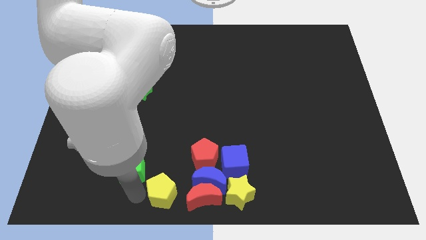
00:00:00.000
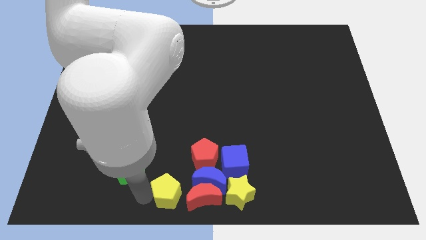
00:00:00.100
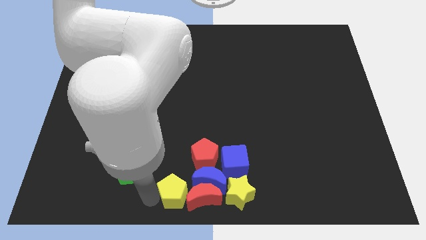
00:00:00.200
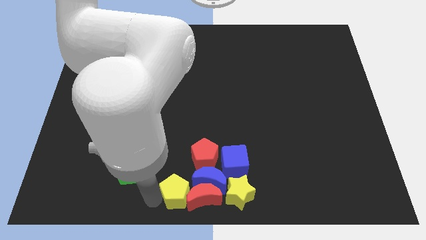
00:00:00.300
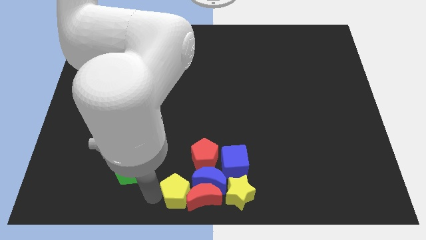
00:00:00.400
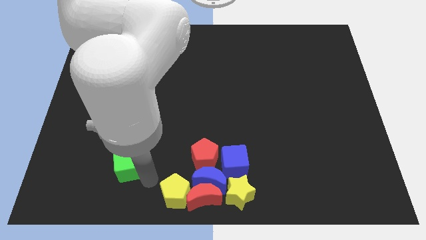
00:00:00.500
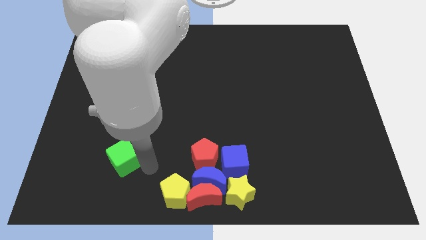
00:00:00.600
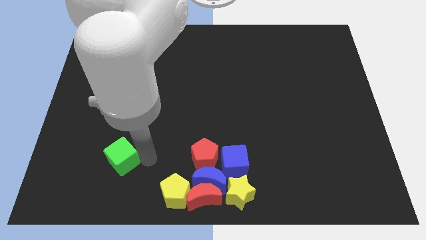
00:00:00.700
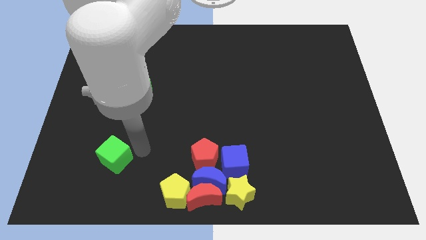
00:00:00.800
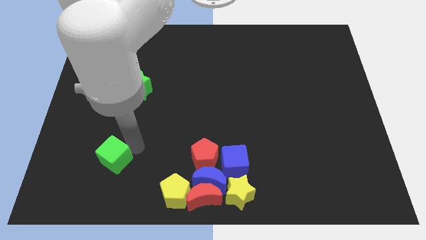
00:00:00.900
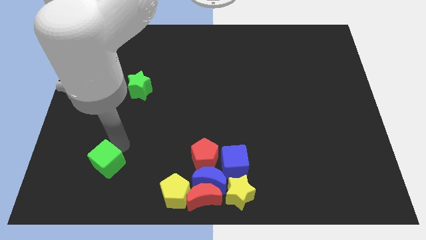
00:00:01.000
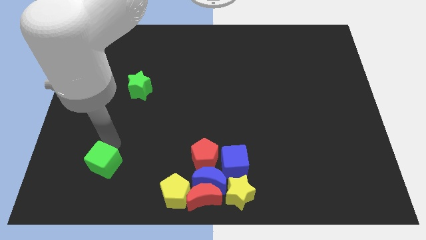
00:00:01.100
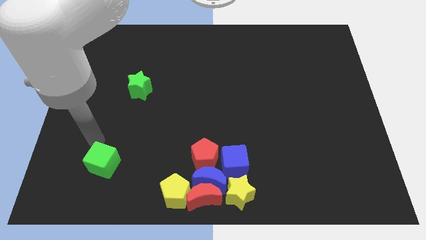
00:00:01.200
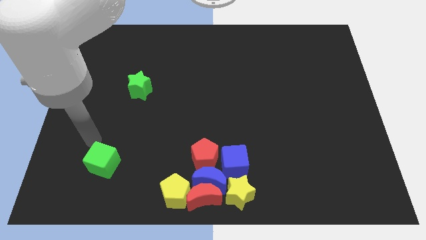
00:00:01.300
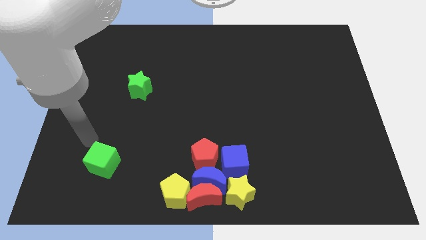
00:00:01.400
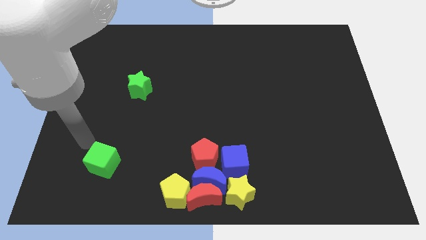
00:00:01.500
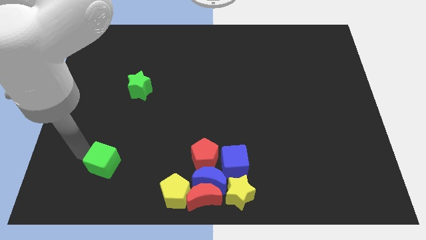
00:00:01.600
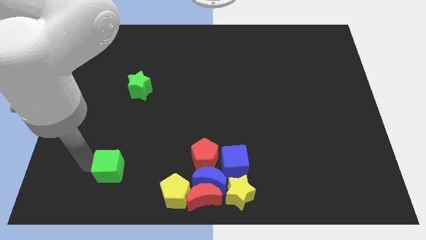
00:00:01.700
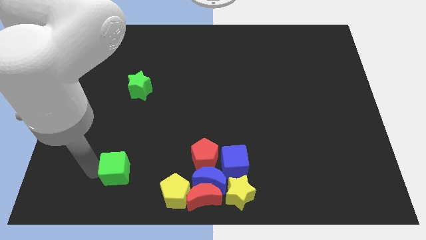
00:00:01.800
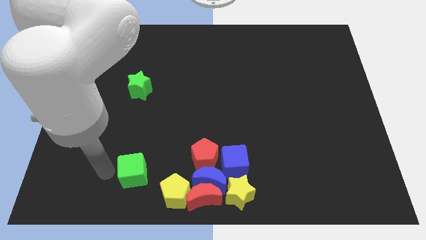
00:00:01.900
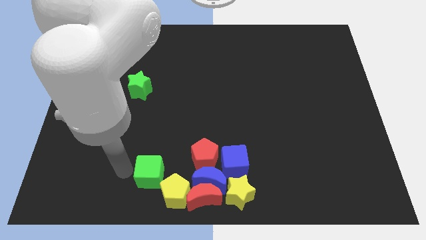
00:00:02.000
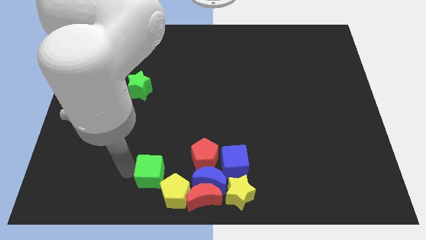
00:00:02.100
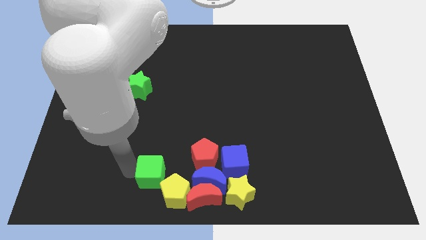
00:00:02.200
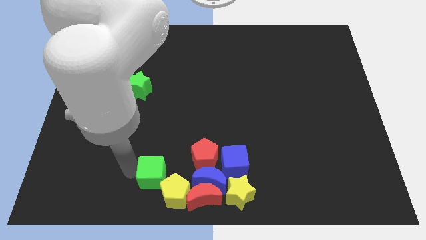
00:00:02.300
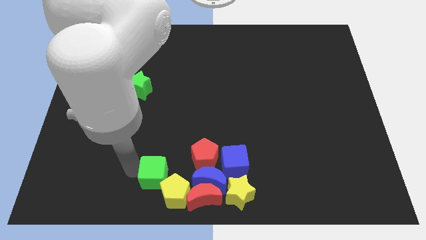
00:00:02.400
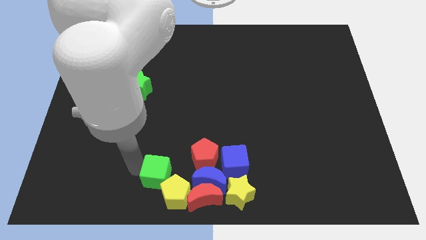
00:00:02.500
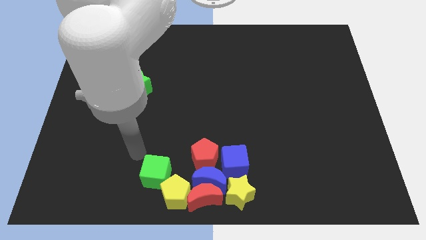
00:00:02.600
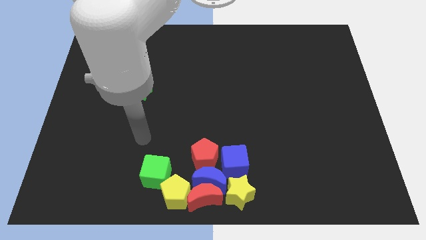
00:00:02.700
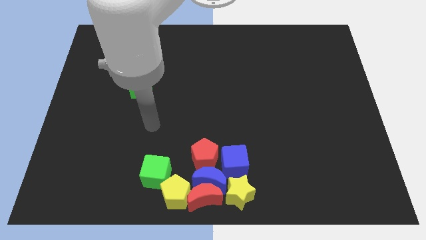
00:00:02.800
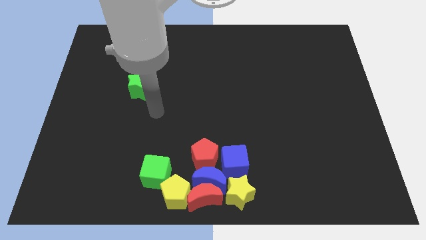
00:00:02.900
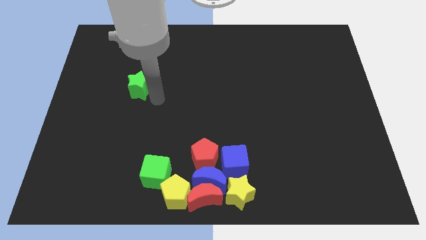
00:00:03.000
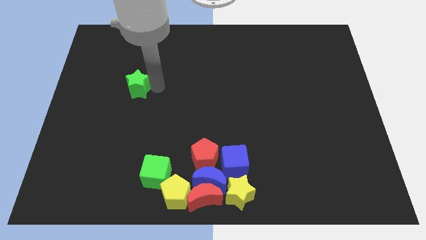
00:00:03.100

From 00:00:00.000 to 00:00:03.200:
place the green cube diagonally to the top left of yellow pentagon

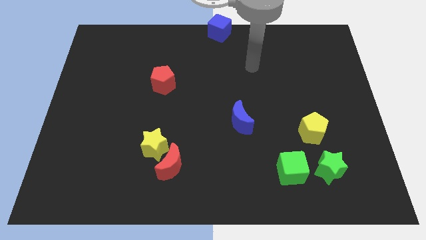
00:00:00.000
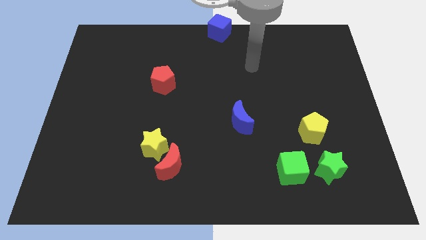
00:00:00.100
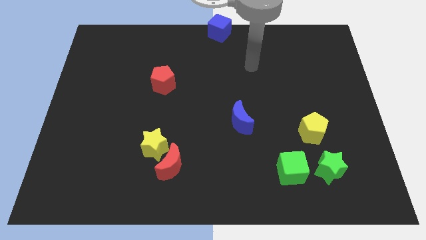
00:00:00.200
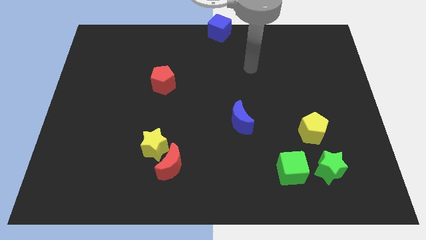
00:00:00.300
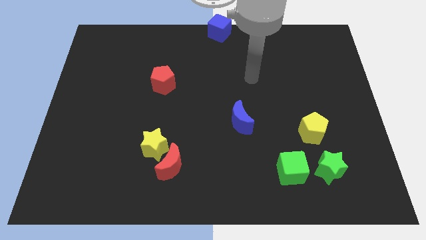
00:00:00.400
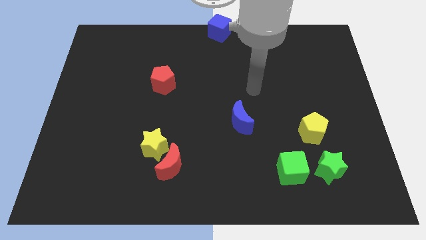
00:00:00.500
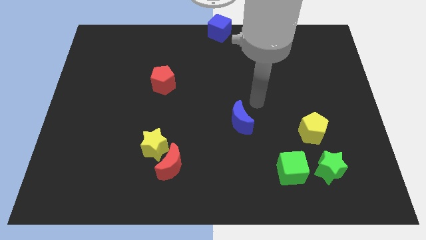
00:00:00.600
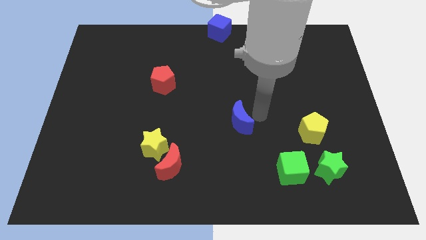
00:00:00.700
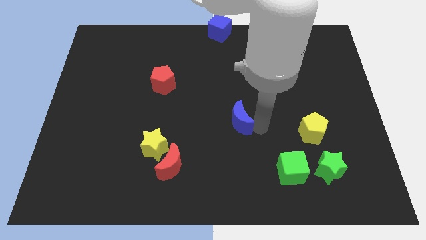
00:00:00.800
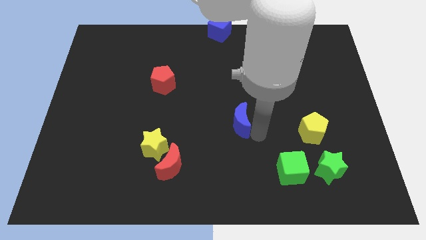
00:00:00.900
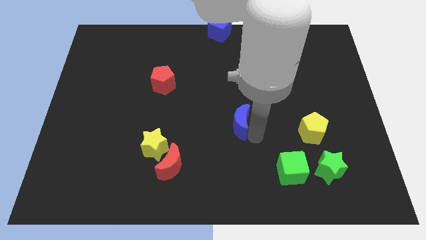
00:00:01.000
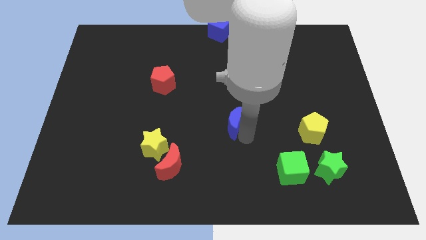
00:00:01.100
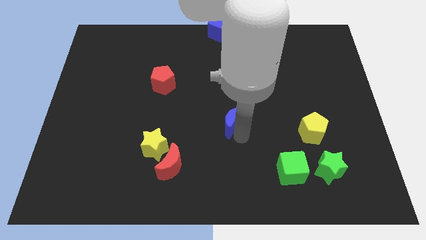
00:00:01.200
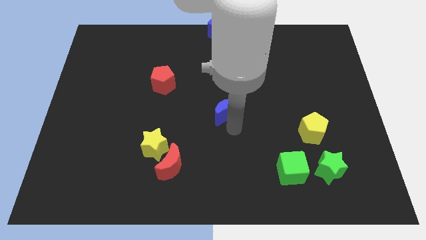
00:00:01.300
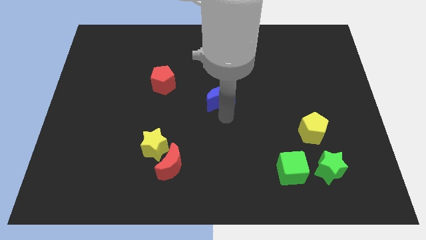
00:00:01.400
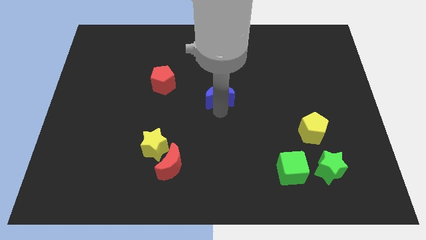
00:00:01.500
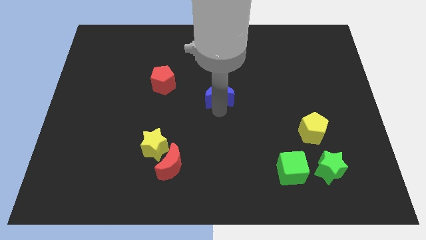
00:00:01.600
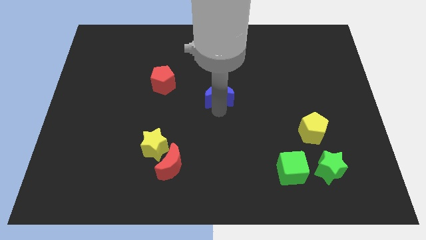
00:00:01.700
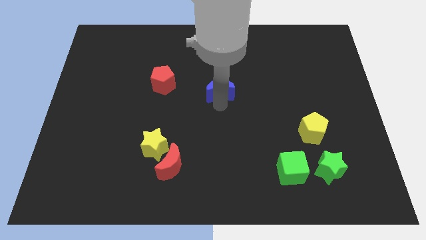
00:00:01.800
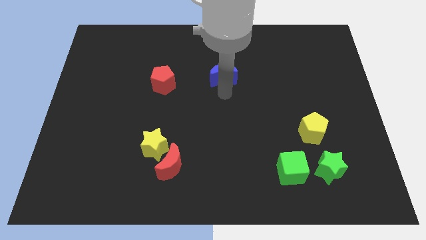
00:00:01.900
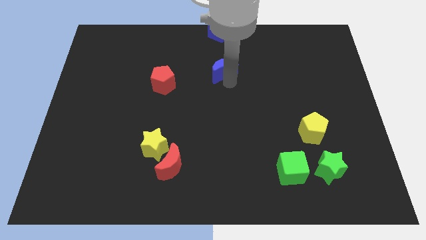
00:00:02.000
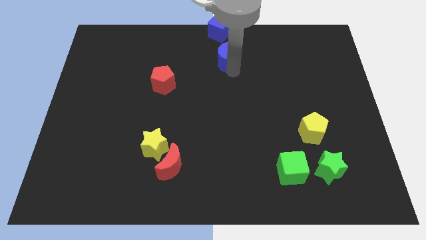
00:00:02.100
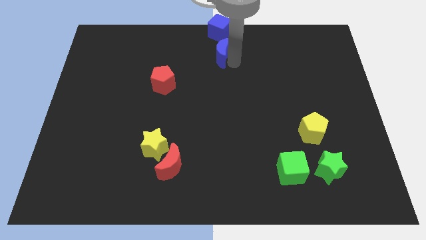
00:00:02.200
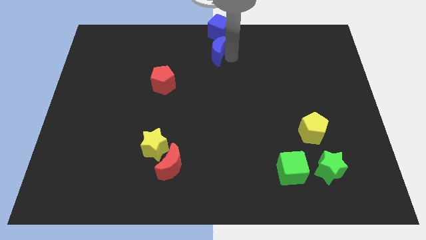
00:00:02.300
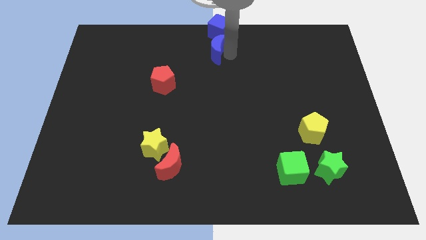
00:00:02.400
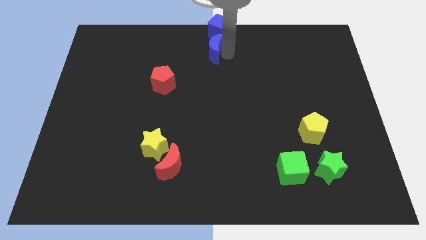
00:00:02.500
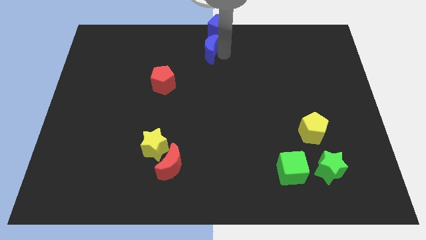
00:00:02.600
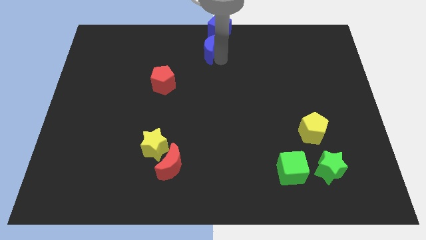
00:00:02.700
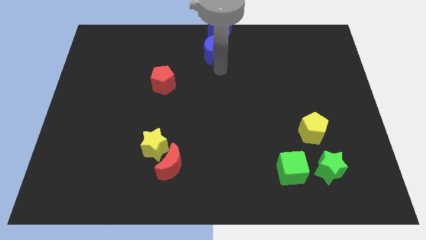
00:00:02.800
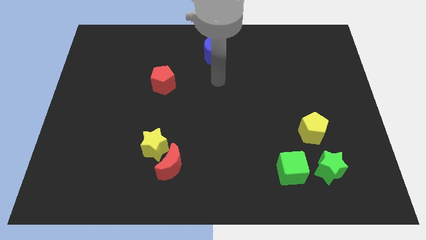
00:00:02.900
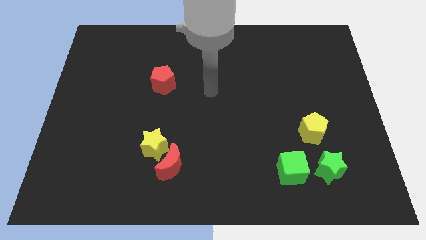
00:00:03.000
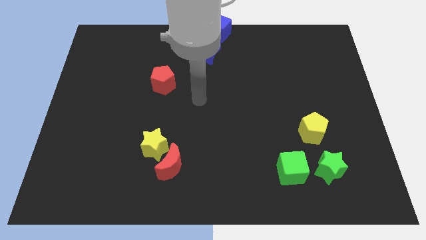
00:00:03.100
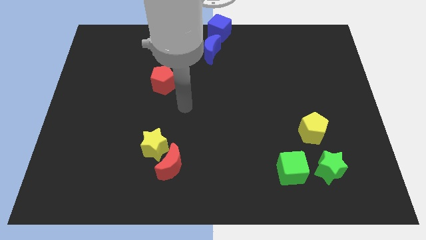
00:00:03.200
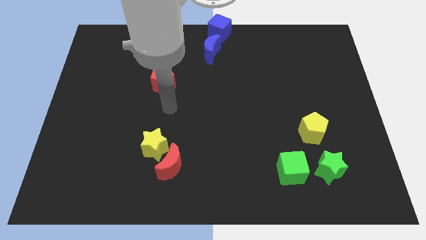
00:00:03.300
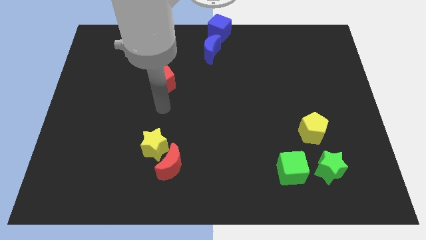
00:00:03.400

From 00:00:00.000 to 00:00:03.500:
move blue crescent at the bottom of blue cube

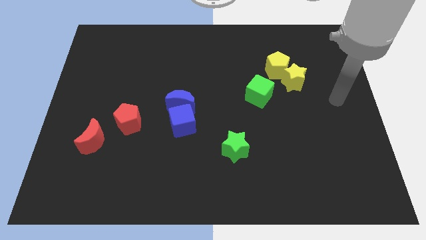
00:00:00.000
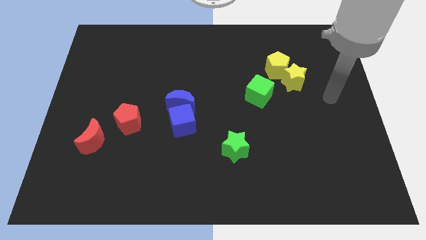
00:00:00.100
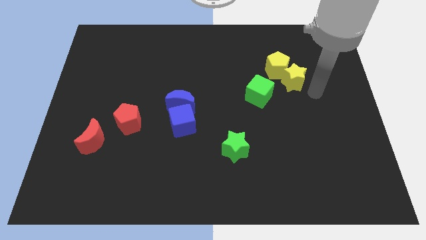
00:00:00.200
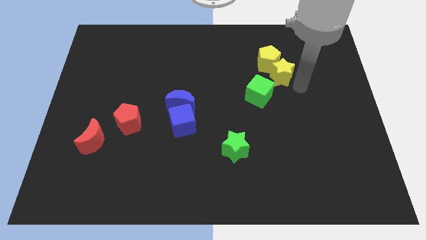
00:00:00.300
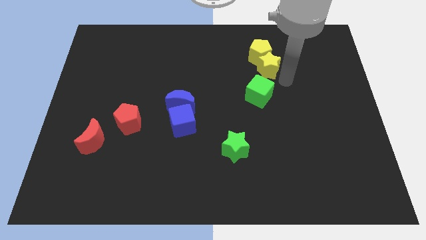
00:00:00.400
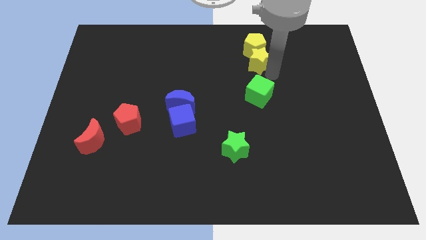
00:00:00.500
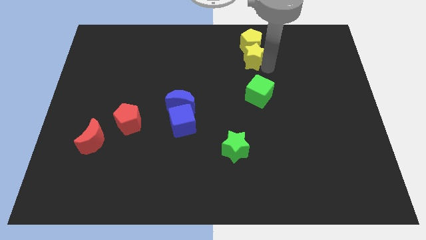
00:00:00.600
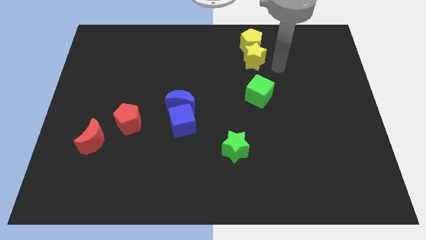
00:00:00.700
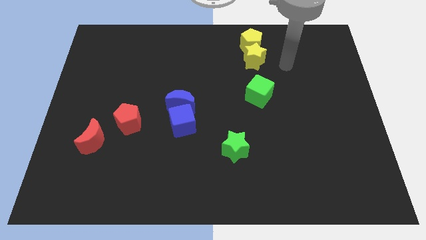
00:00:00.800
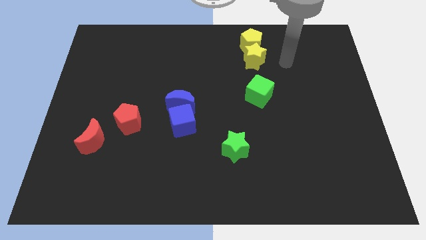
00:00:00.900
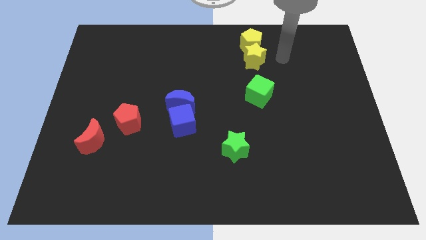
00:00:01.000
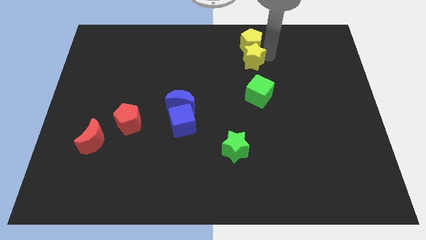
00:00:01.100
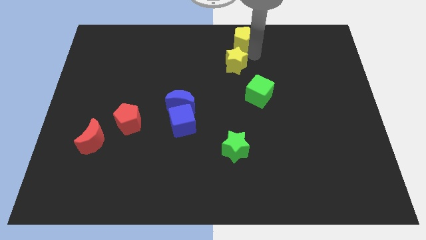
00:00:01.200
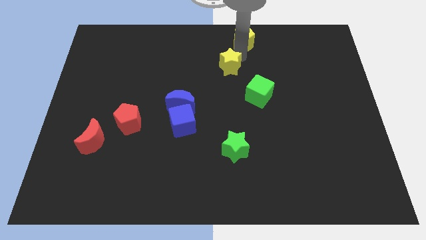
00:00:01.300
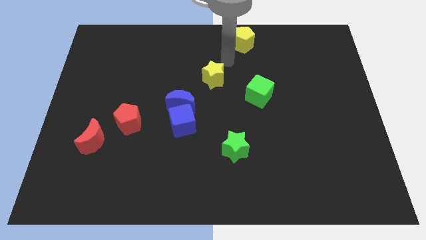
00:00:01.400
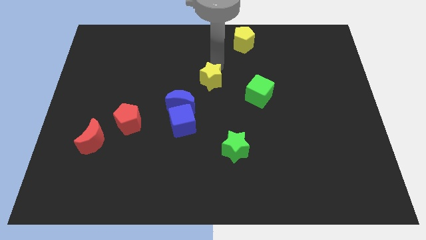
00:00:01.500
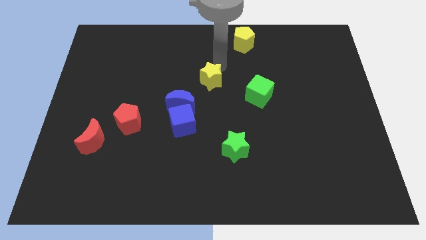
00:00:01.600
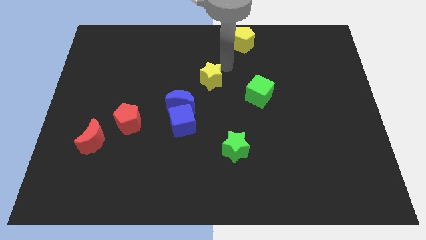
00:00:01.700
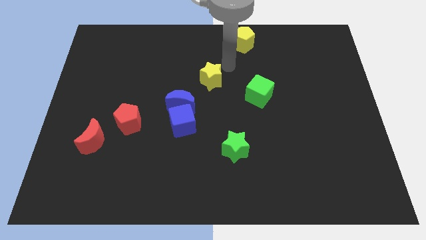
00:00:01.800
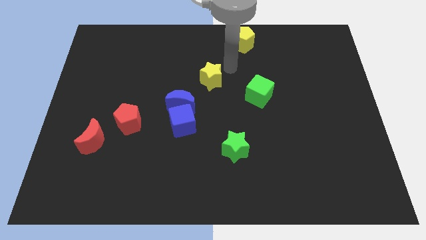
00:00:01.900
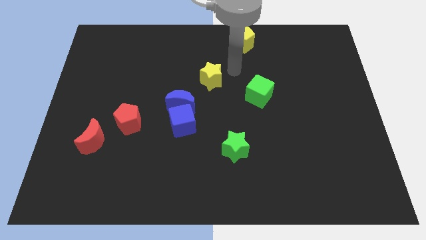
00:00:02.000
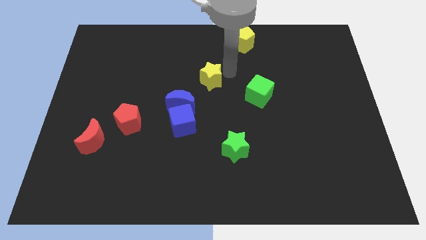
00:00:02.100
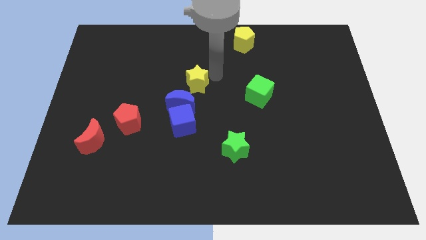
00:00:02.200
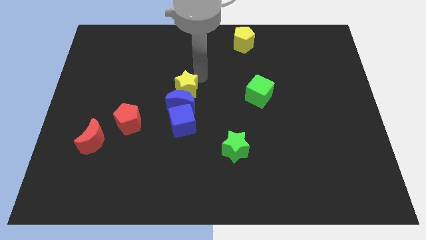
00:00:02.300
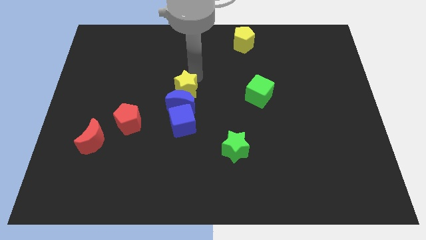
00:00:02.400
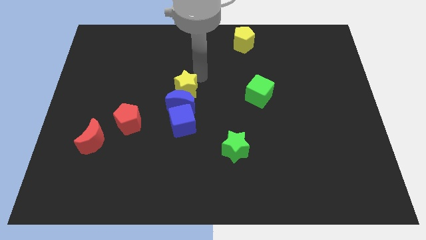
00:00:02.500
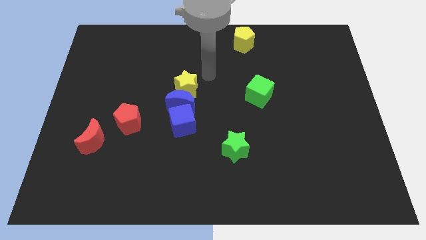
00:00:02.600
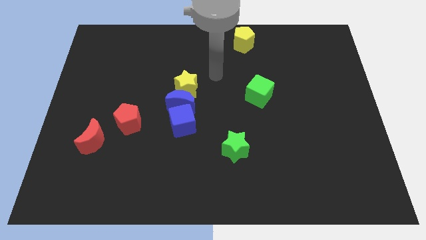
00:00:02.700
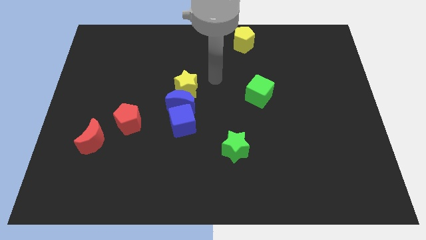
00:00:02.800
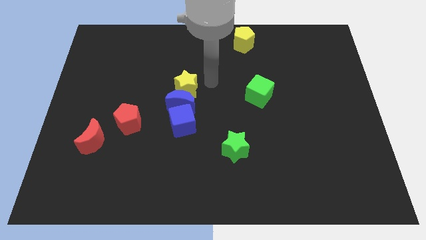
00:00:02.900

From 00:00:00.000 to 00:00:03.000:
separate yellow blocks
